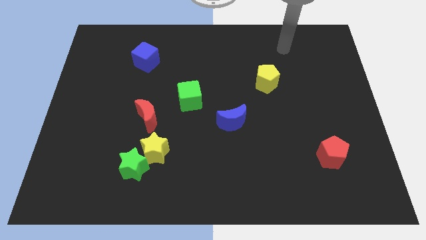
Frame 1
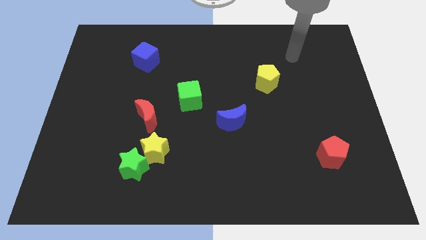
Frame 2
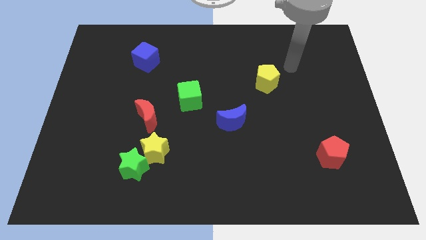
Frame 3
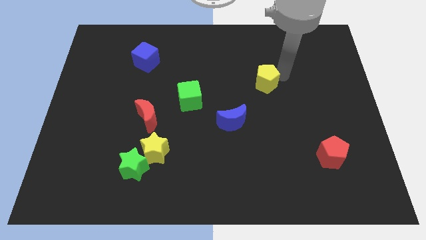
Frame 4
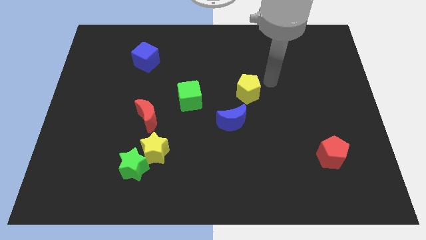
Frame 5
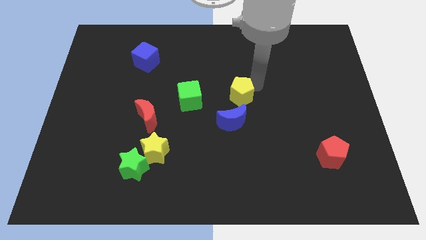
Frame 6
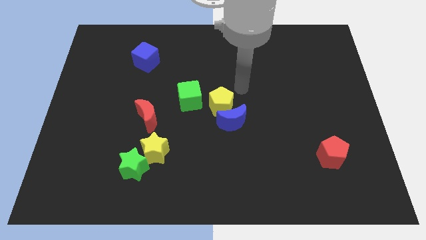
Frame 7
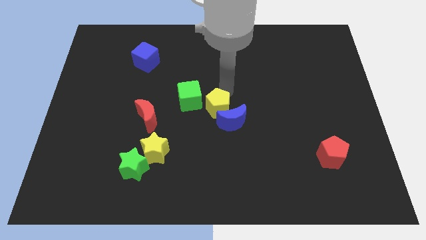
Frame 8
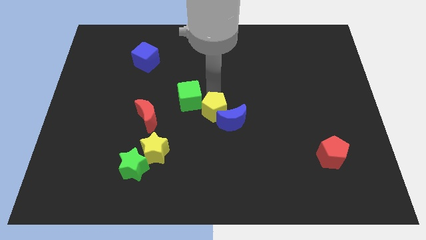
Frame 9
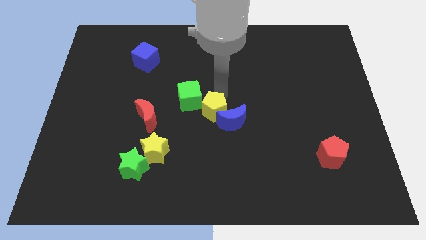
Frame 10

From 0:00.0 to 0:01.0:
put the yellow pentagon diagonally in between the green cube and the blue crescent

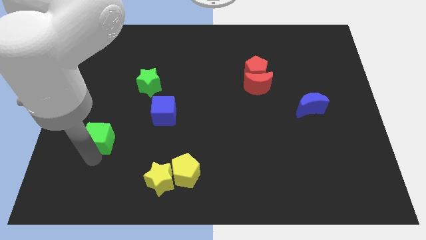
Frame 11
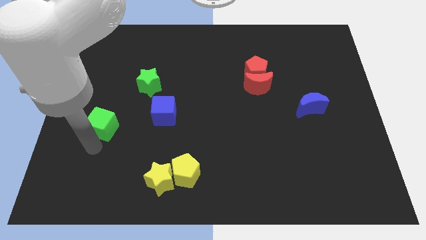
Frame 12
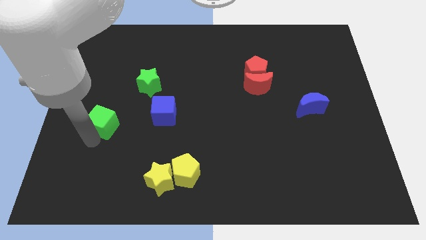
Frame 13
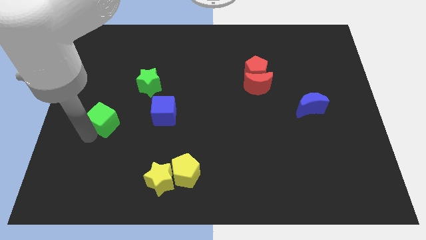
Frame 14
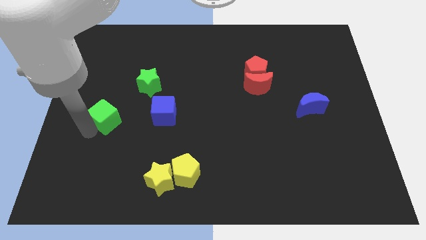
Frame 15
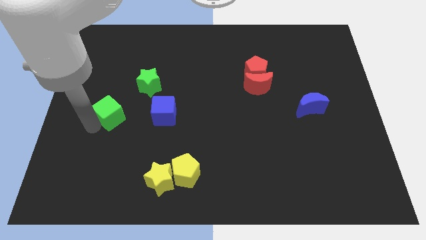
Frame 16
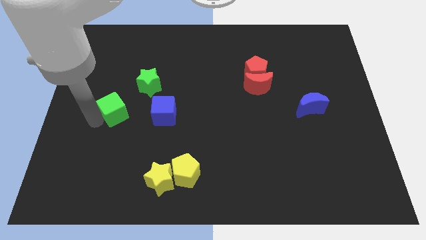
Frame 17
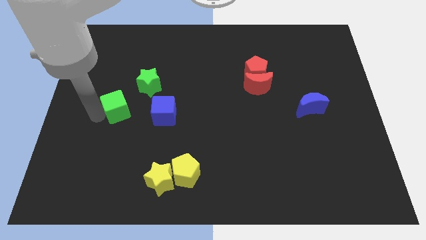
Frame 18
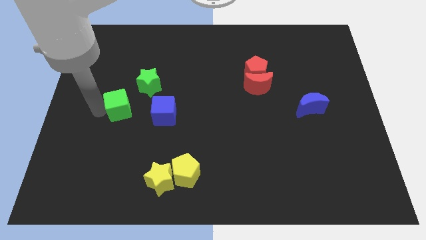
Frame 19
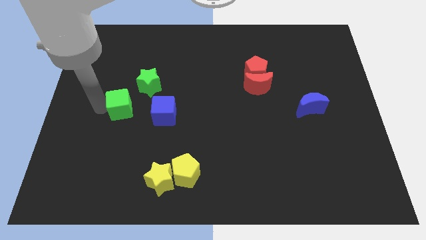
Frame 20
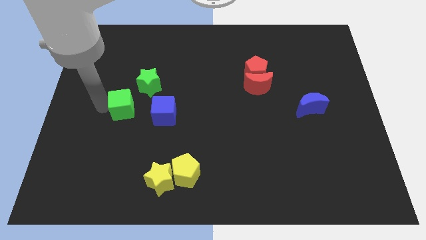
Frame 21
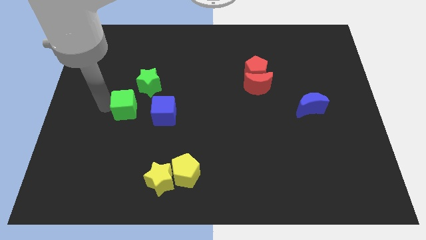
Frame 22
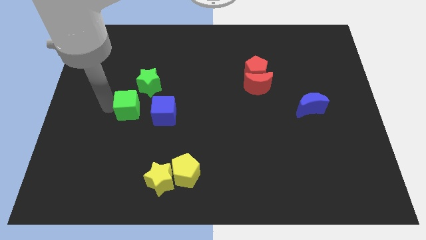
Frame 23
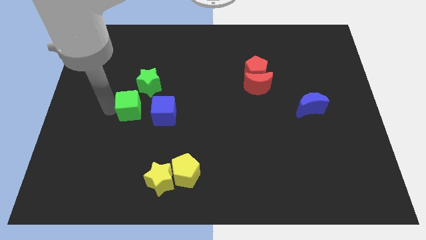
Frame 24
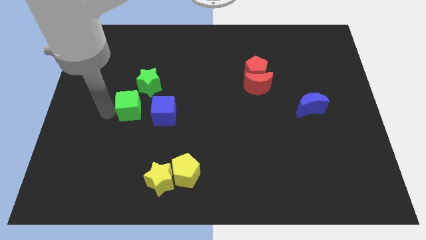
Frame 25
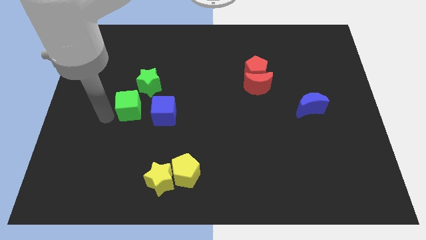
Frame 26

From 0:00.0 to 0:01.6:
push the green cube towards the green star

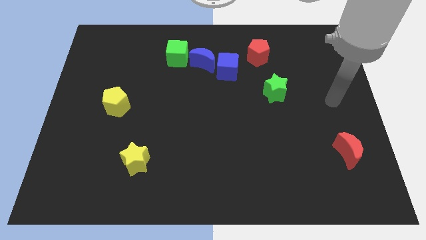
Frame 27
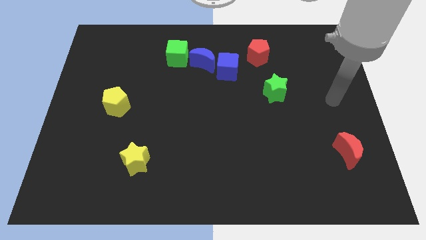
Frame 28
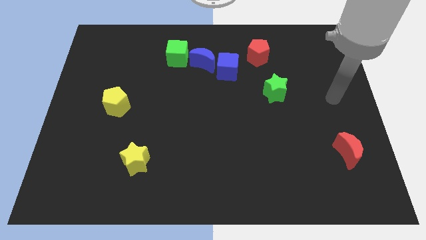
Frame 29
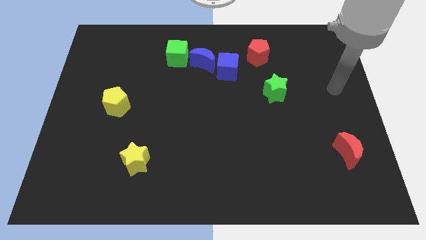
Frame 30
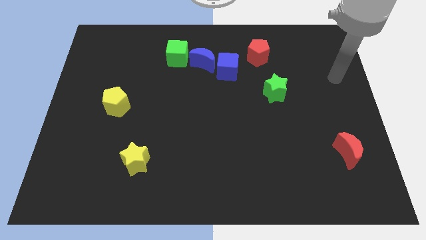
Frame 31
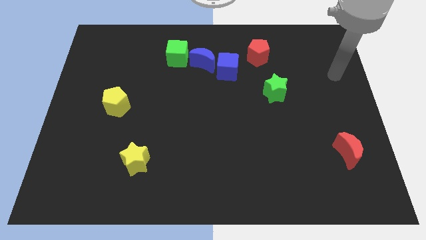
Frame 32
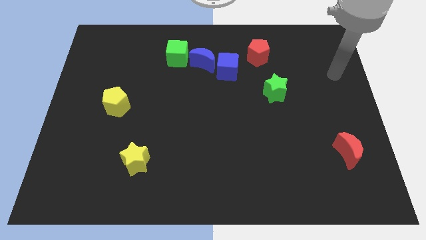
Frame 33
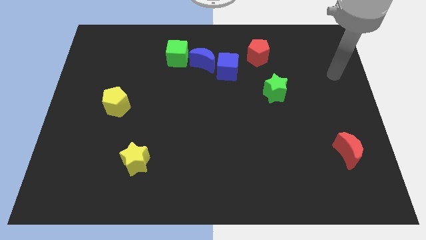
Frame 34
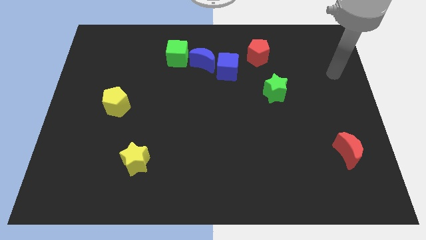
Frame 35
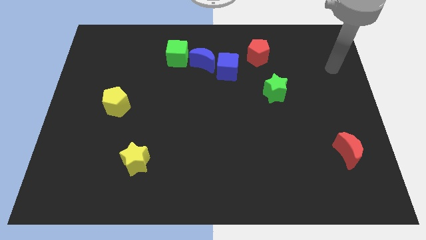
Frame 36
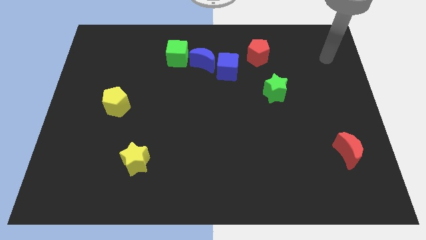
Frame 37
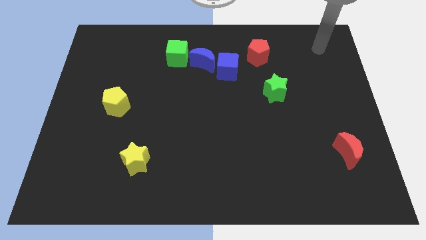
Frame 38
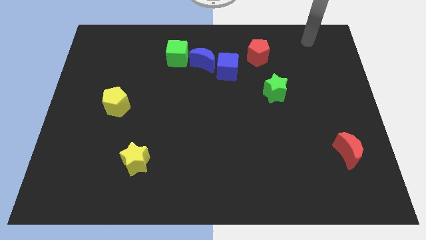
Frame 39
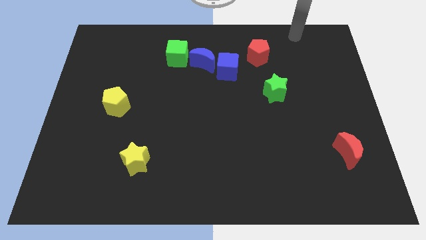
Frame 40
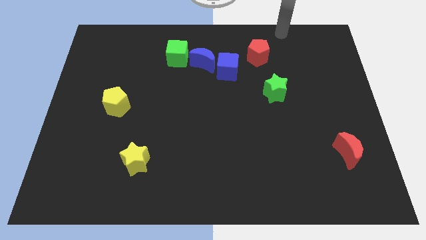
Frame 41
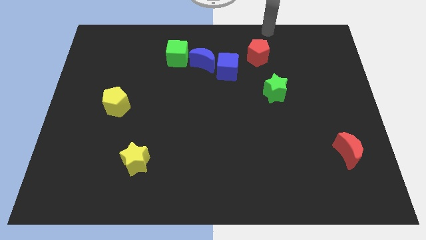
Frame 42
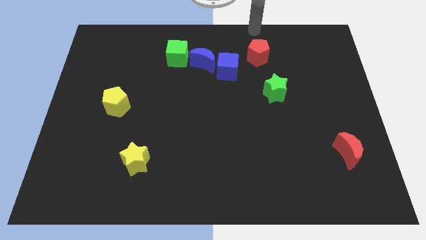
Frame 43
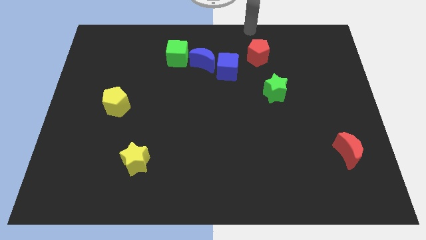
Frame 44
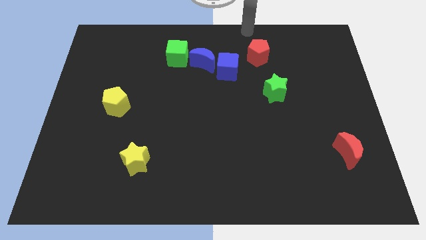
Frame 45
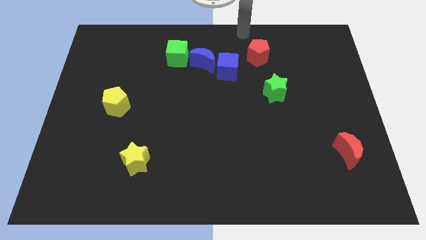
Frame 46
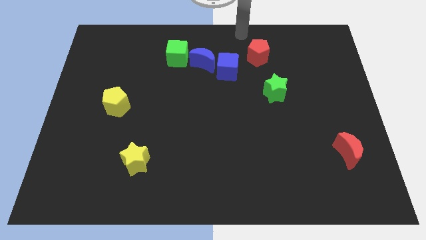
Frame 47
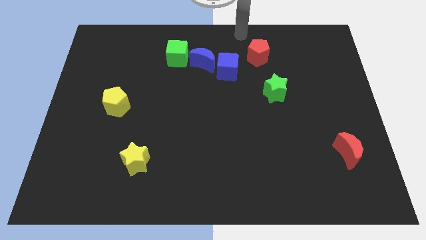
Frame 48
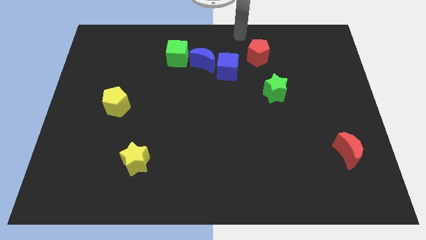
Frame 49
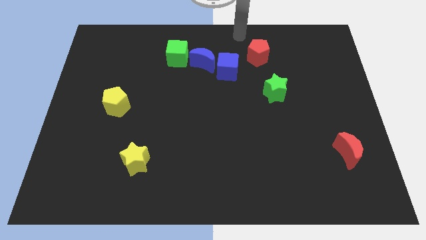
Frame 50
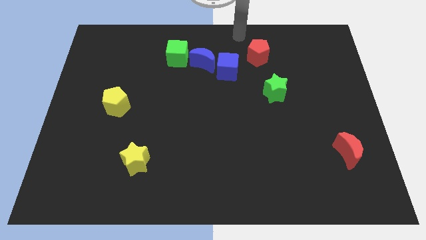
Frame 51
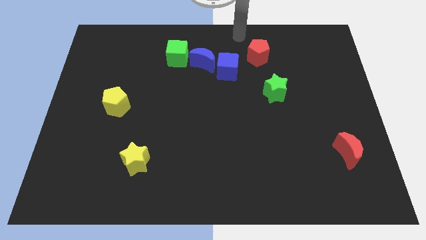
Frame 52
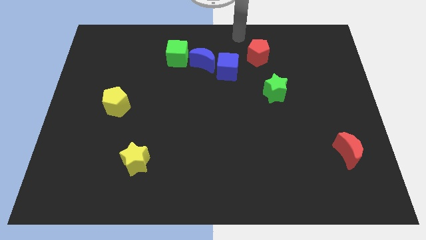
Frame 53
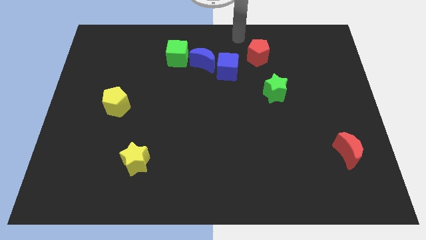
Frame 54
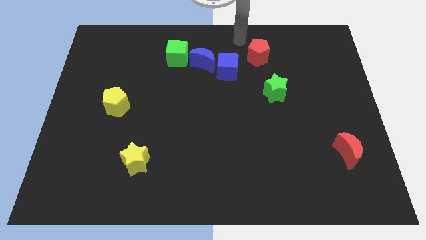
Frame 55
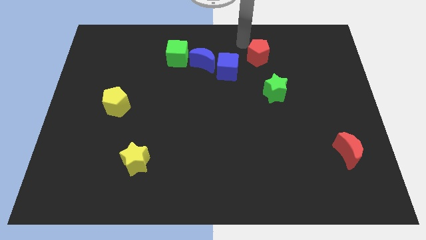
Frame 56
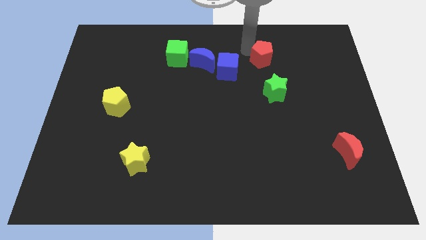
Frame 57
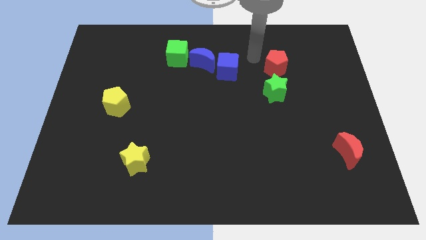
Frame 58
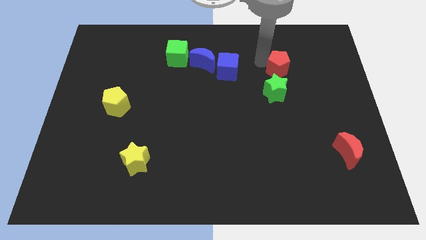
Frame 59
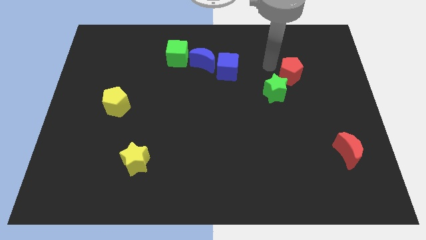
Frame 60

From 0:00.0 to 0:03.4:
push the red pentagon close to the green star

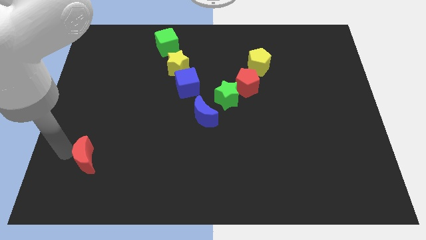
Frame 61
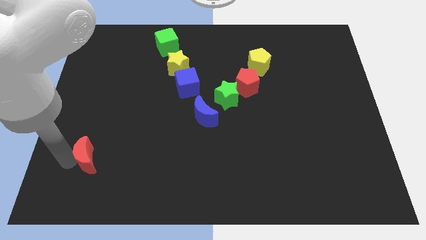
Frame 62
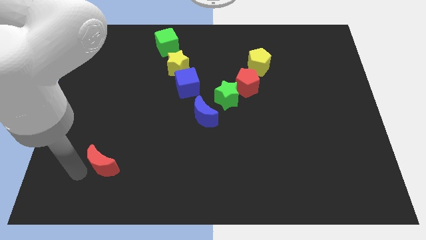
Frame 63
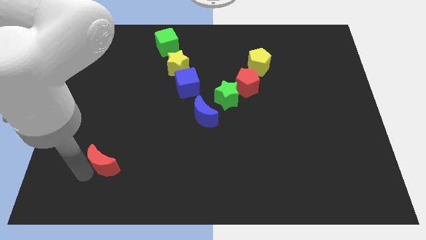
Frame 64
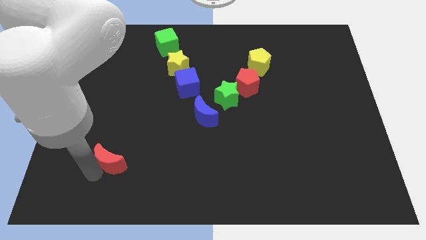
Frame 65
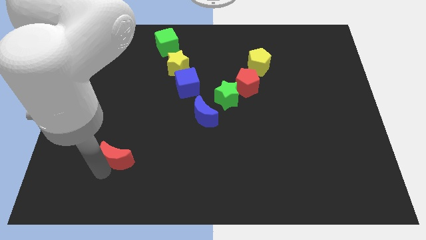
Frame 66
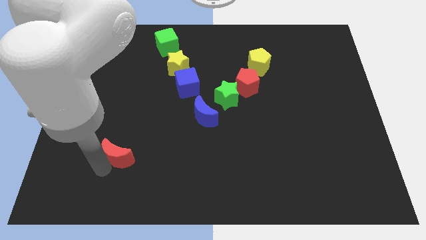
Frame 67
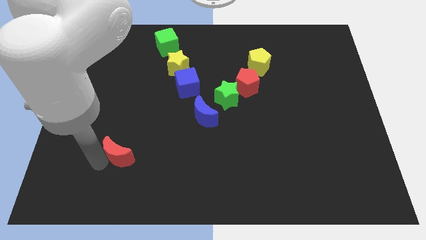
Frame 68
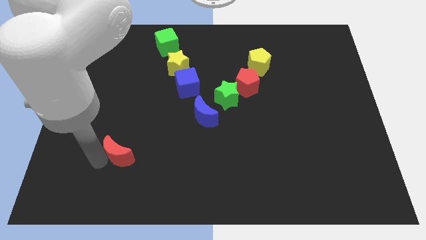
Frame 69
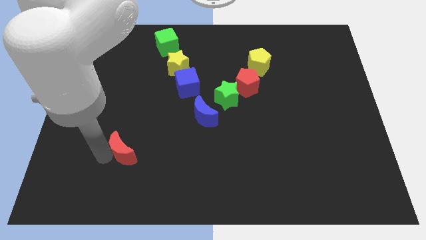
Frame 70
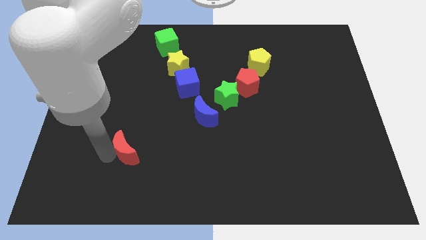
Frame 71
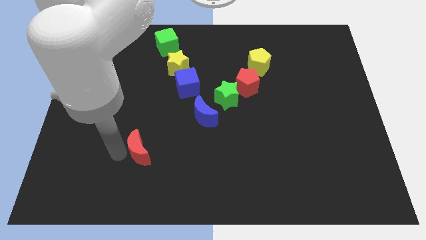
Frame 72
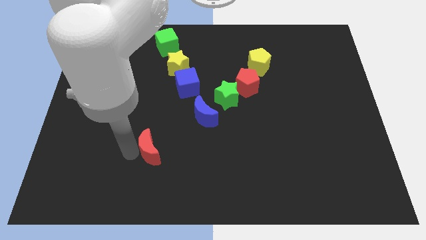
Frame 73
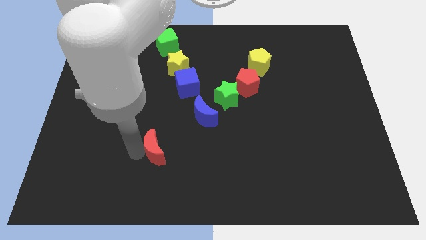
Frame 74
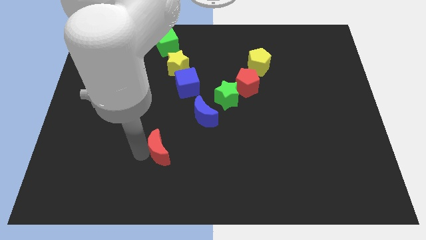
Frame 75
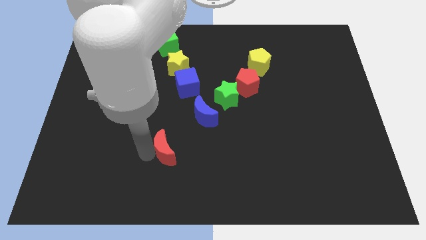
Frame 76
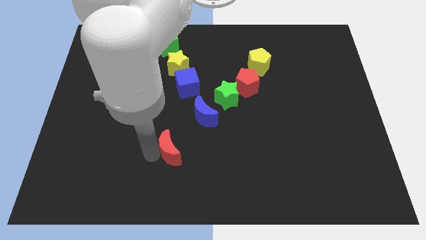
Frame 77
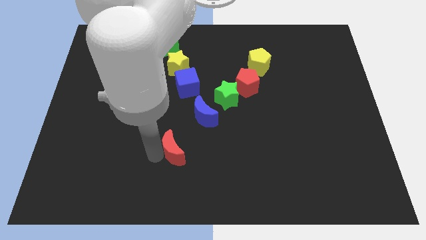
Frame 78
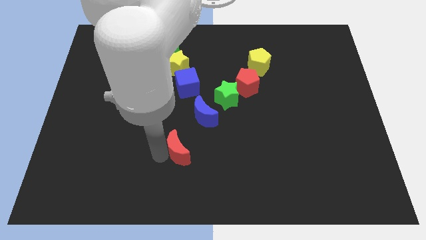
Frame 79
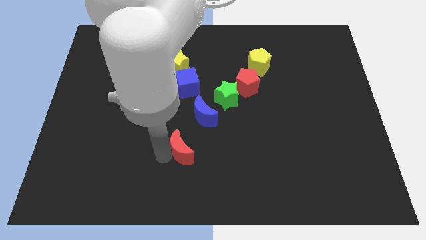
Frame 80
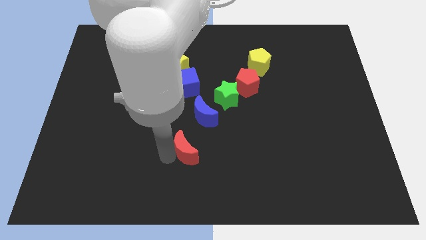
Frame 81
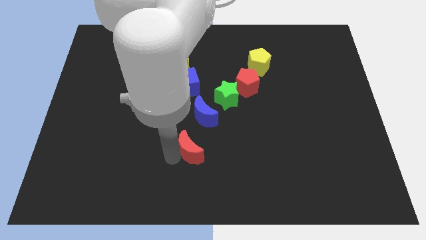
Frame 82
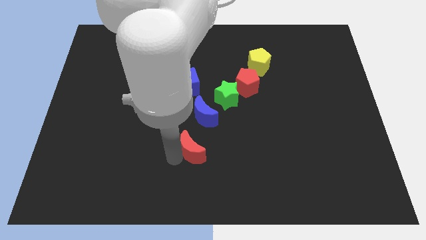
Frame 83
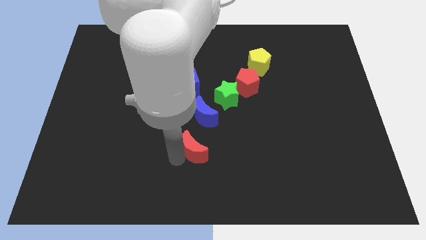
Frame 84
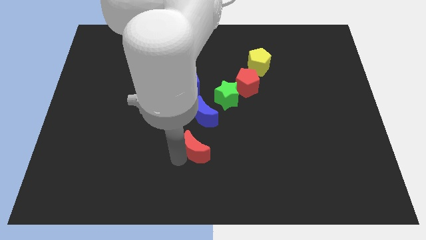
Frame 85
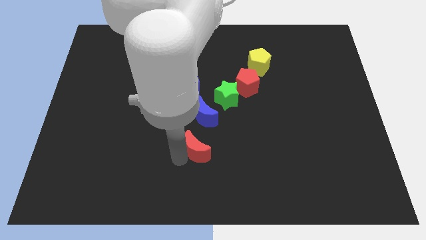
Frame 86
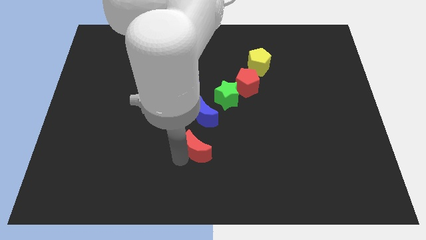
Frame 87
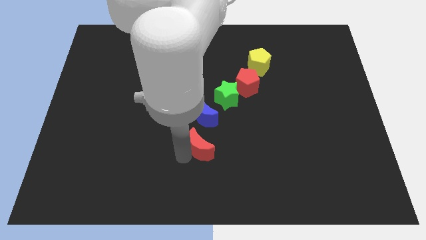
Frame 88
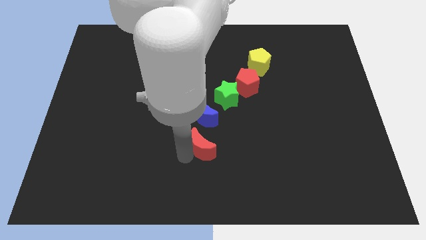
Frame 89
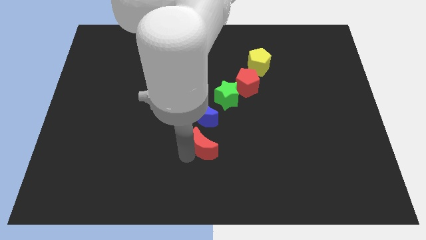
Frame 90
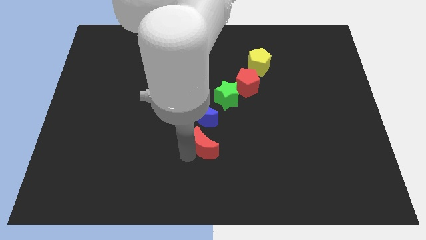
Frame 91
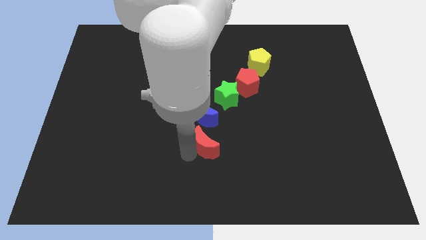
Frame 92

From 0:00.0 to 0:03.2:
place the red moon at the bottom side of the blue moon
